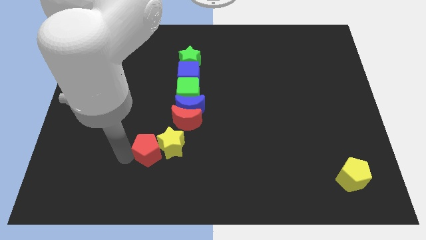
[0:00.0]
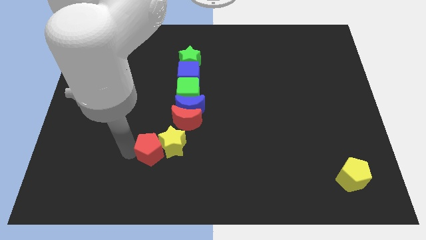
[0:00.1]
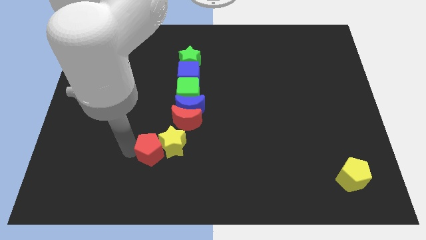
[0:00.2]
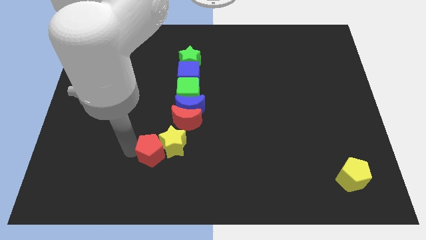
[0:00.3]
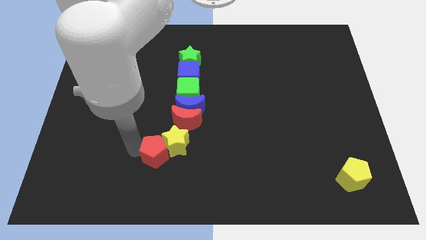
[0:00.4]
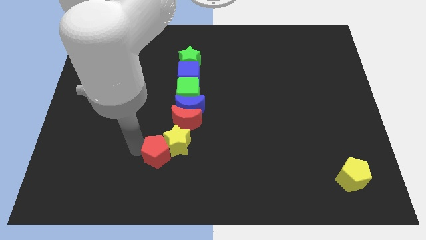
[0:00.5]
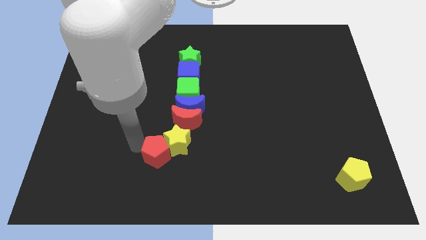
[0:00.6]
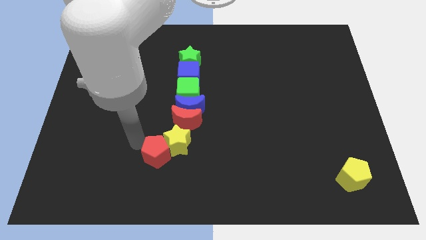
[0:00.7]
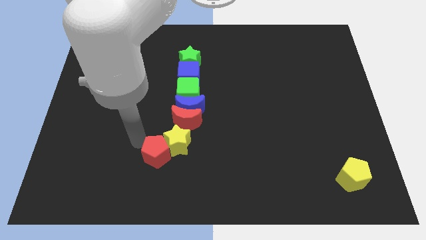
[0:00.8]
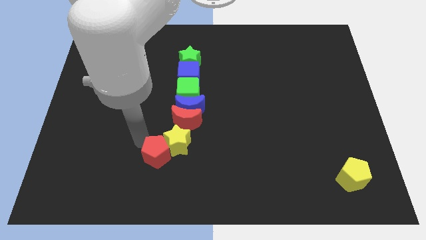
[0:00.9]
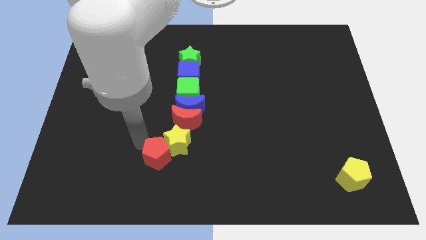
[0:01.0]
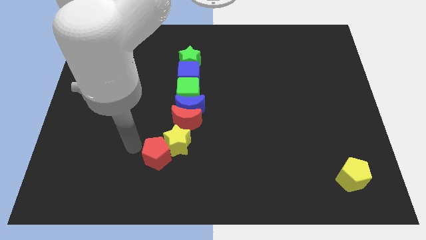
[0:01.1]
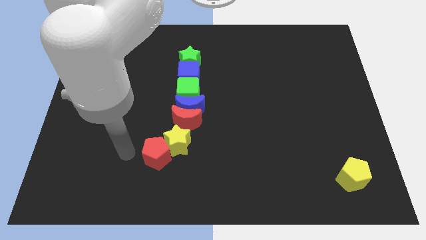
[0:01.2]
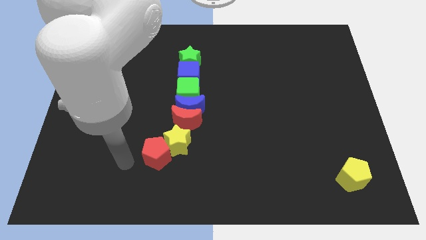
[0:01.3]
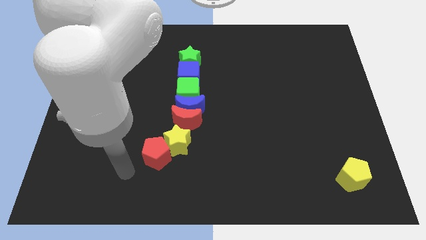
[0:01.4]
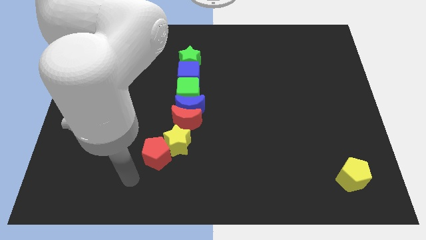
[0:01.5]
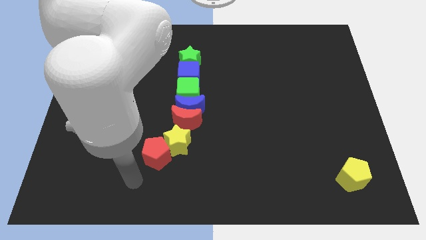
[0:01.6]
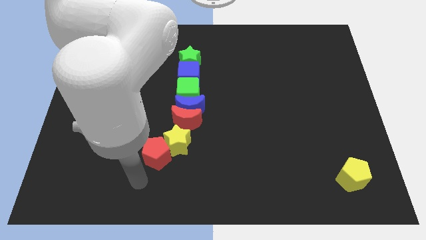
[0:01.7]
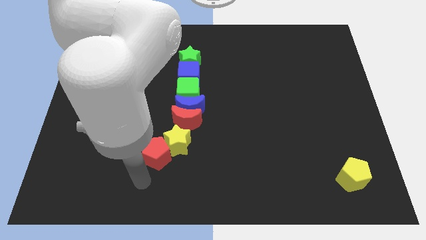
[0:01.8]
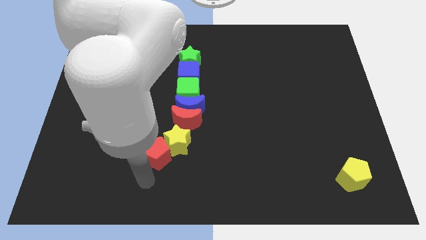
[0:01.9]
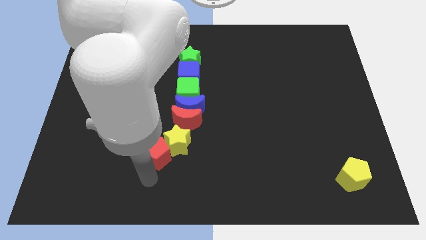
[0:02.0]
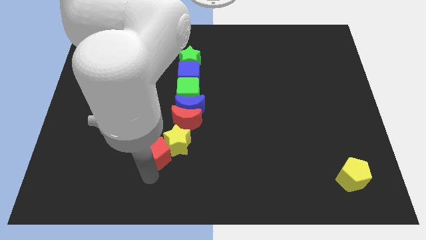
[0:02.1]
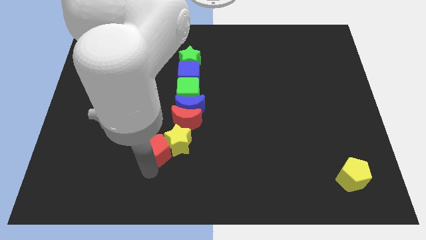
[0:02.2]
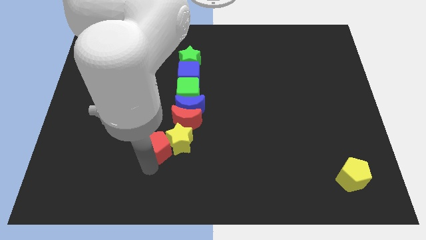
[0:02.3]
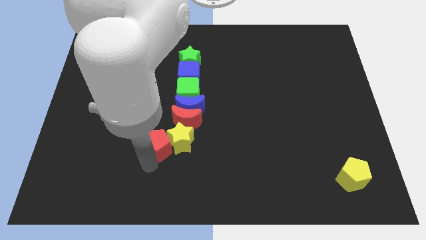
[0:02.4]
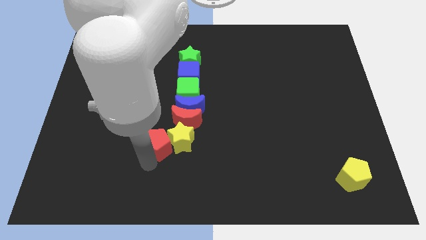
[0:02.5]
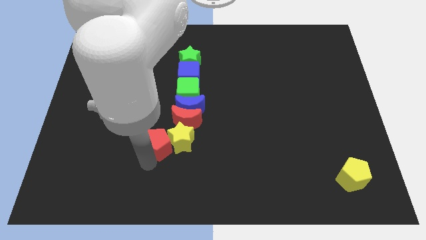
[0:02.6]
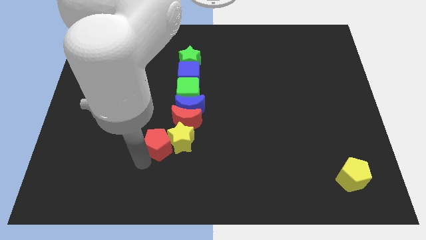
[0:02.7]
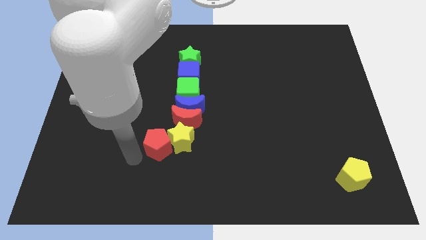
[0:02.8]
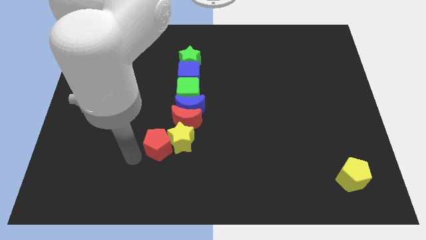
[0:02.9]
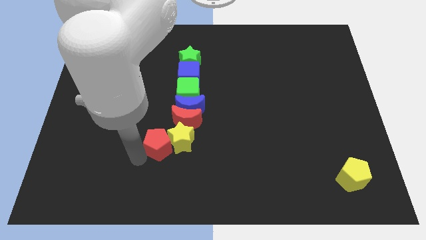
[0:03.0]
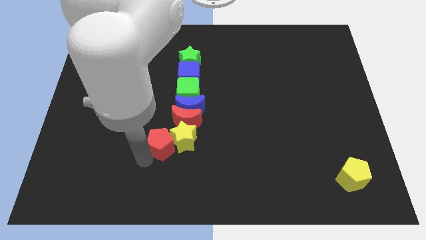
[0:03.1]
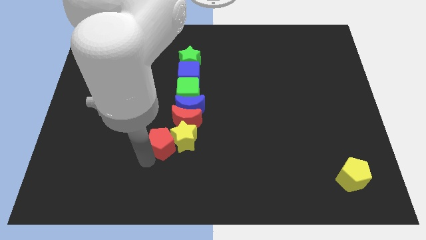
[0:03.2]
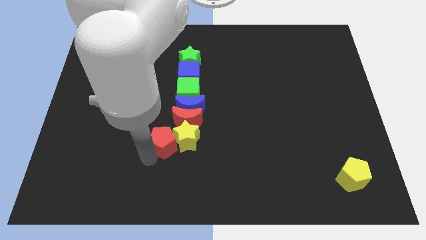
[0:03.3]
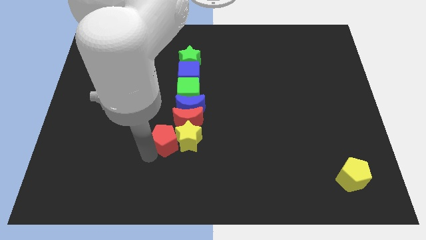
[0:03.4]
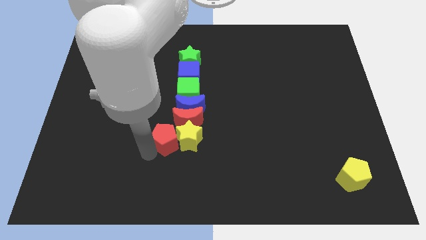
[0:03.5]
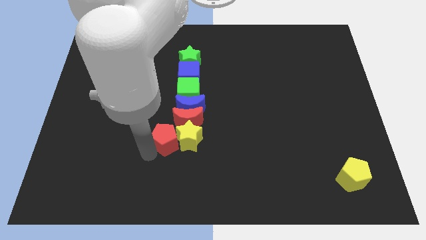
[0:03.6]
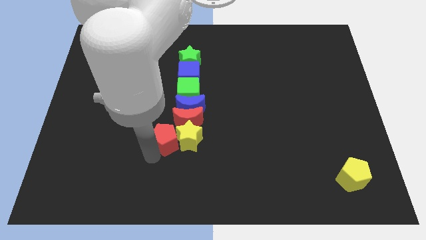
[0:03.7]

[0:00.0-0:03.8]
move red pentagon into yellow star

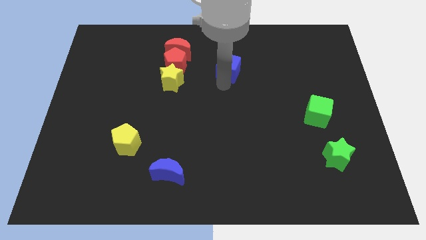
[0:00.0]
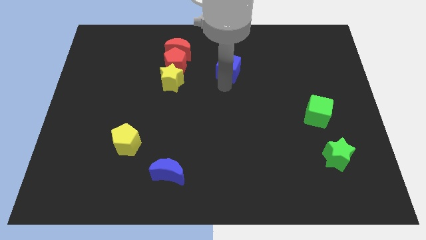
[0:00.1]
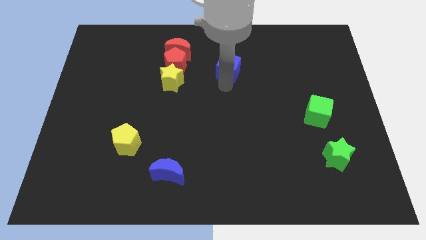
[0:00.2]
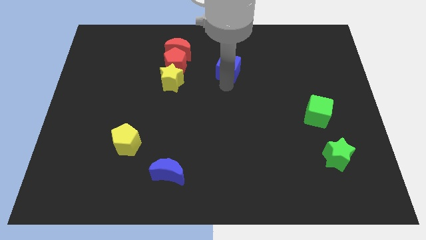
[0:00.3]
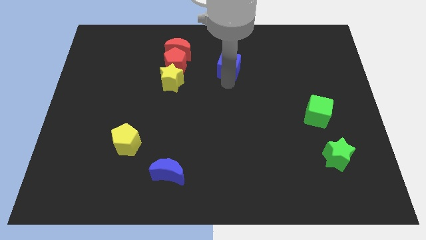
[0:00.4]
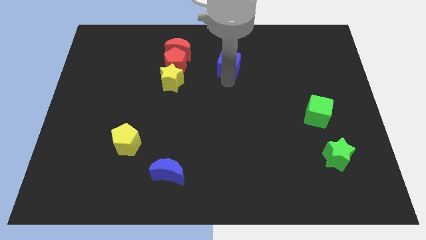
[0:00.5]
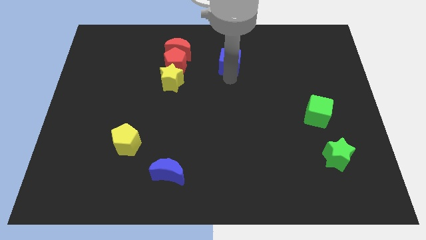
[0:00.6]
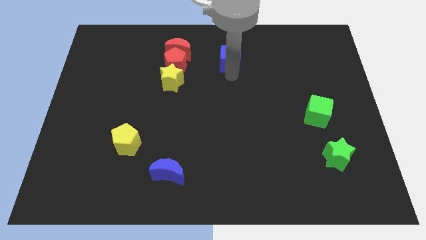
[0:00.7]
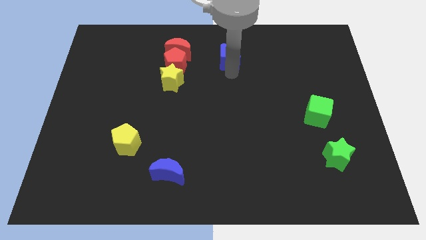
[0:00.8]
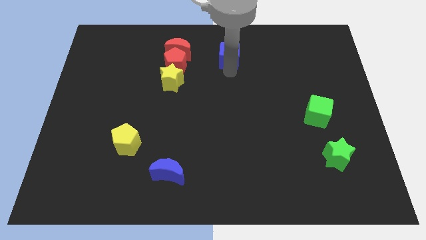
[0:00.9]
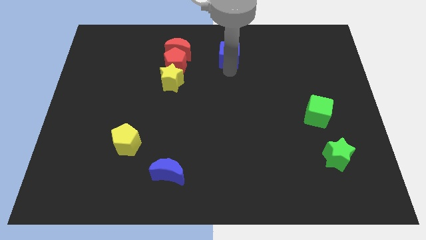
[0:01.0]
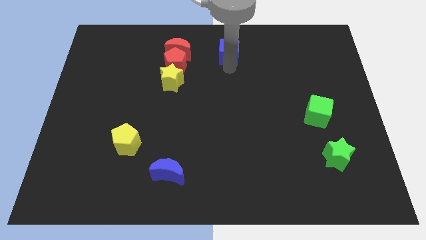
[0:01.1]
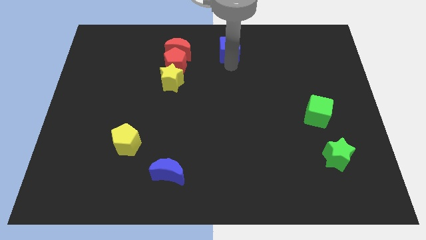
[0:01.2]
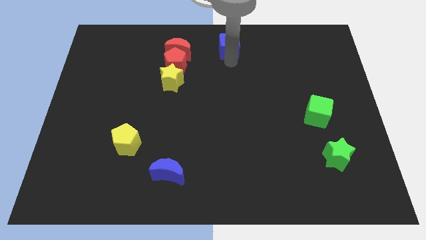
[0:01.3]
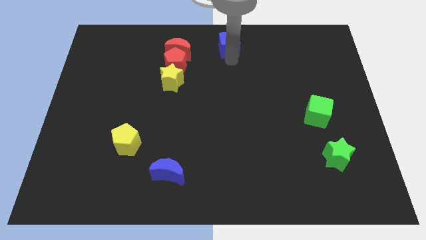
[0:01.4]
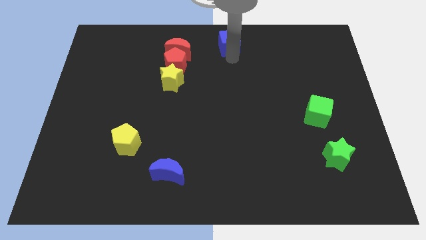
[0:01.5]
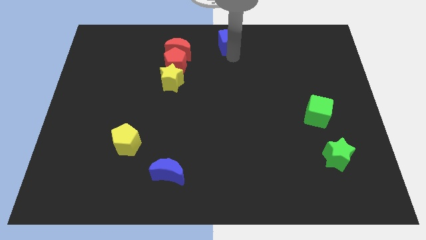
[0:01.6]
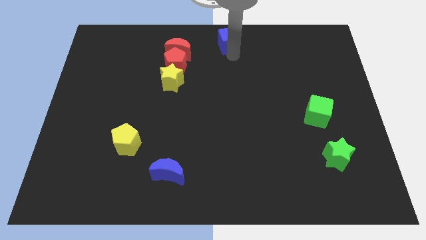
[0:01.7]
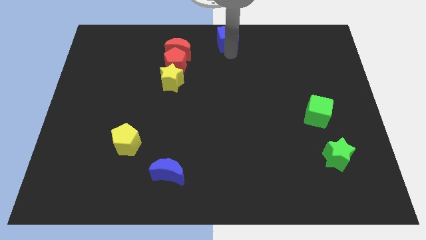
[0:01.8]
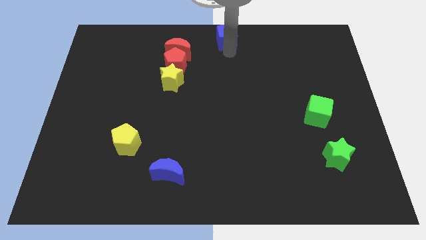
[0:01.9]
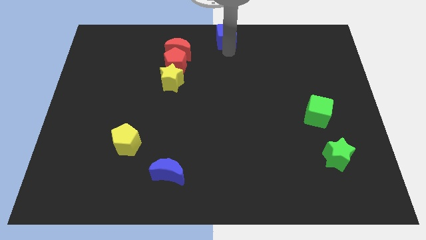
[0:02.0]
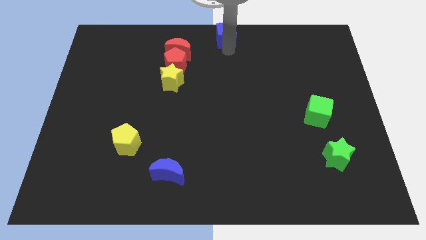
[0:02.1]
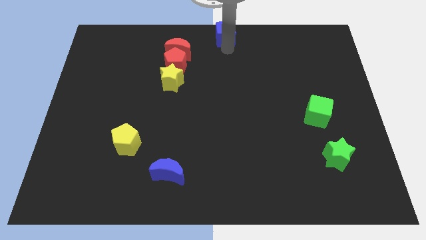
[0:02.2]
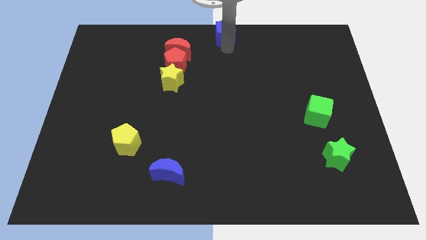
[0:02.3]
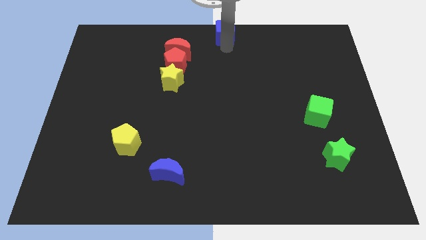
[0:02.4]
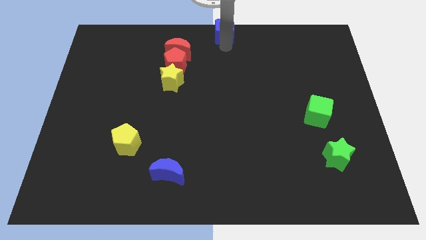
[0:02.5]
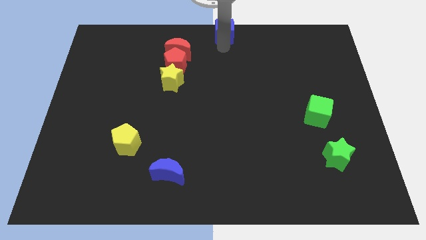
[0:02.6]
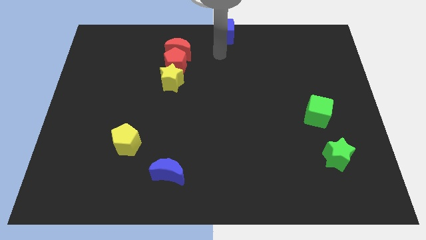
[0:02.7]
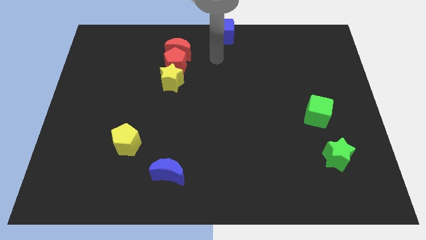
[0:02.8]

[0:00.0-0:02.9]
place the blue cube at top center of the board

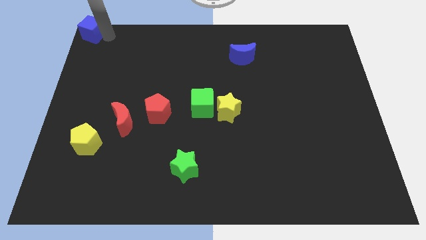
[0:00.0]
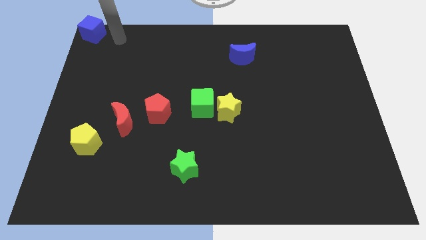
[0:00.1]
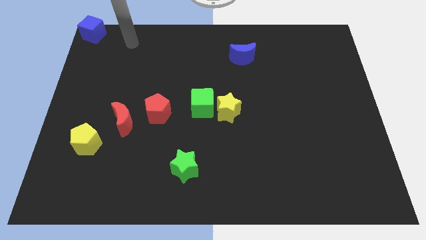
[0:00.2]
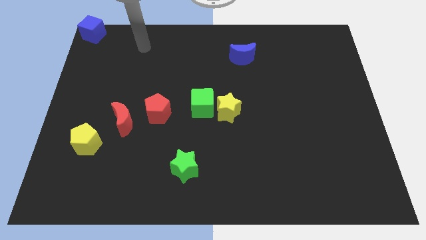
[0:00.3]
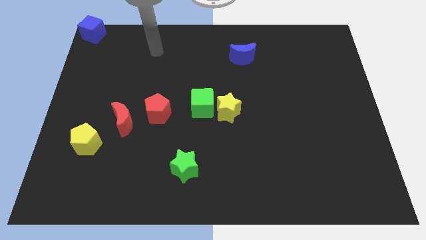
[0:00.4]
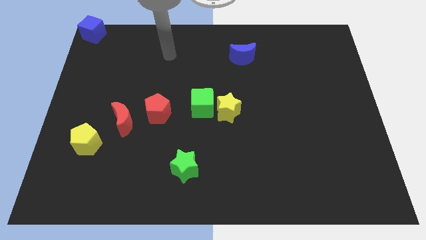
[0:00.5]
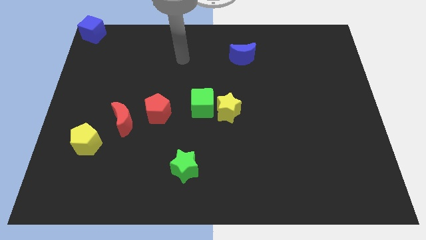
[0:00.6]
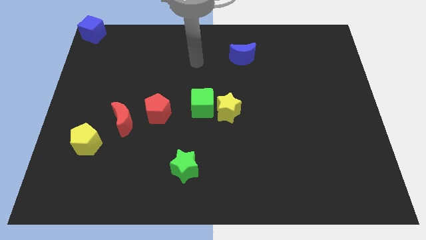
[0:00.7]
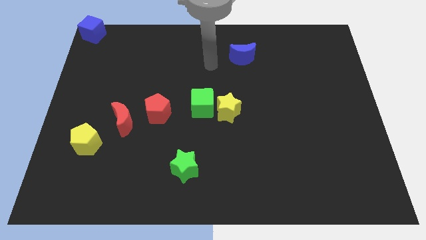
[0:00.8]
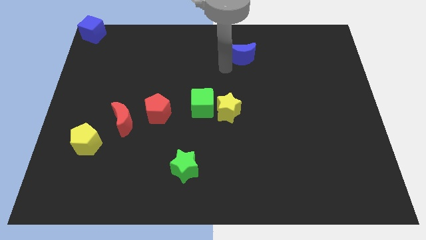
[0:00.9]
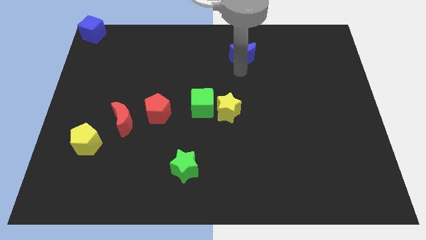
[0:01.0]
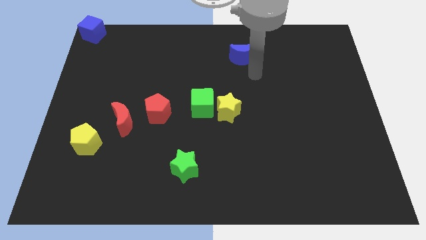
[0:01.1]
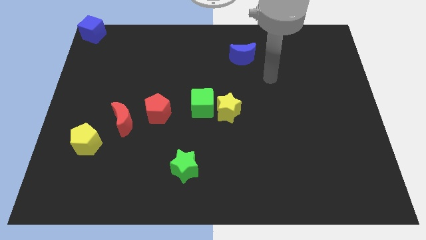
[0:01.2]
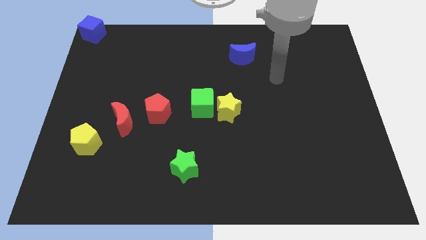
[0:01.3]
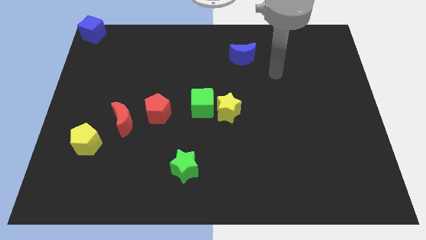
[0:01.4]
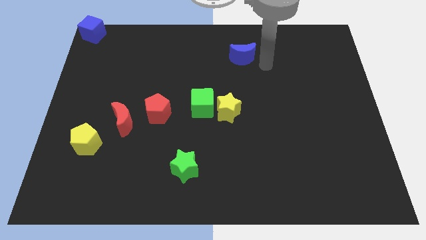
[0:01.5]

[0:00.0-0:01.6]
move your arm towards the right of blue crescent

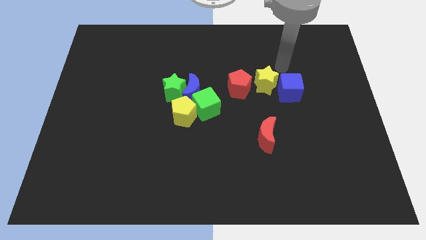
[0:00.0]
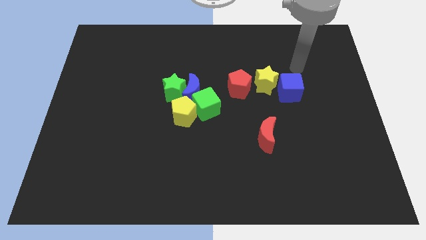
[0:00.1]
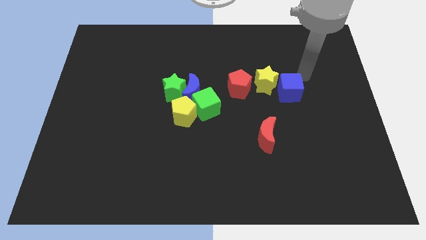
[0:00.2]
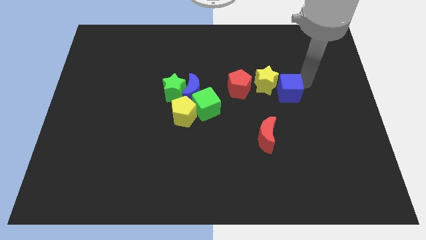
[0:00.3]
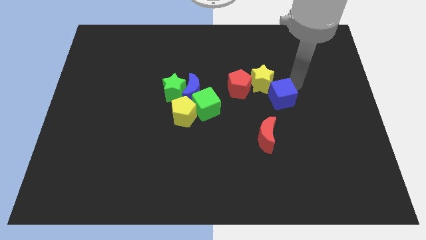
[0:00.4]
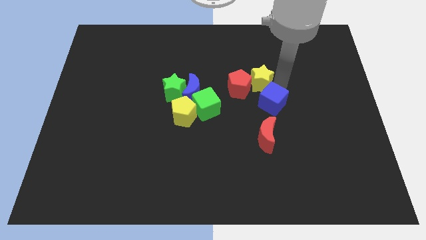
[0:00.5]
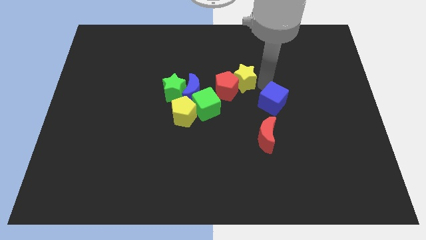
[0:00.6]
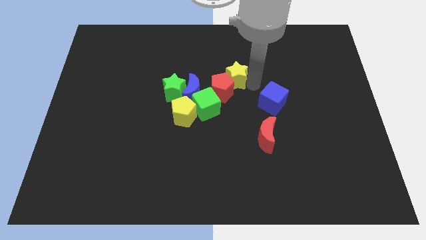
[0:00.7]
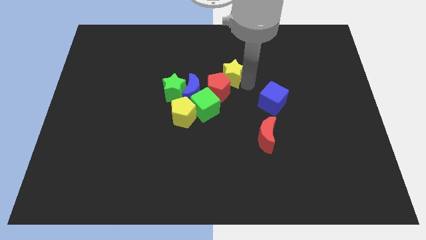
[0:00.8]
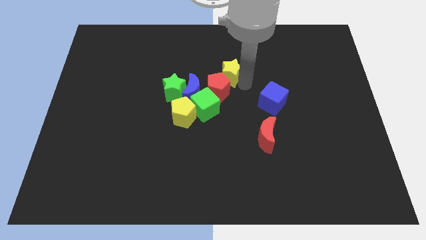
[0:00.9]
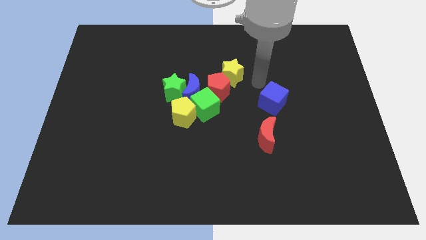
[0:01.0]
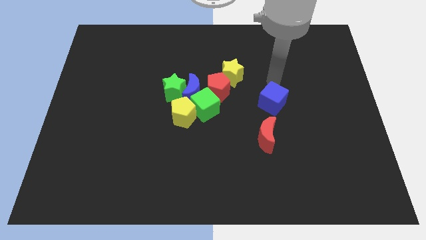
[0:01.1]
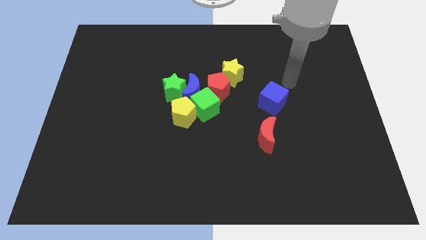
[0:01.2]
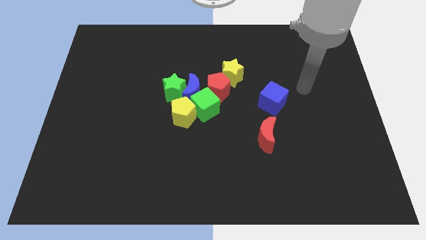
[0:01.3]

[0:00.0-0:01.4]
move yellow star and red pentagon towards the left
